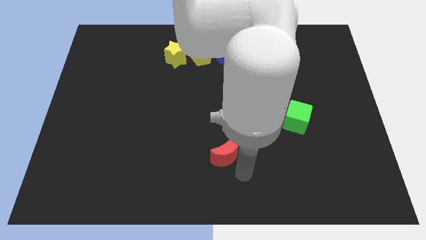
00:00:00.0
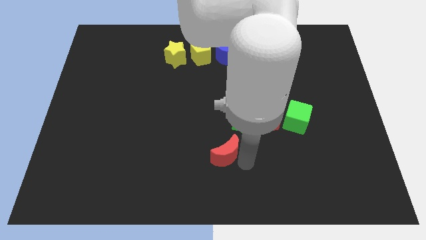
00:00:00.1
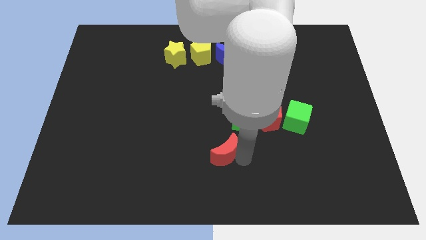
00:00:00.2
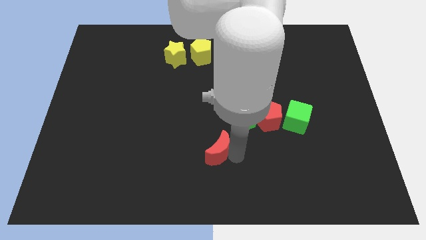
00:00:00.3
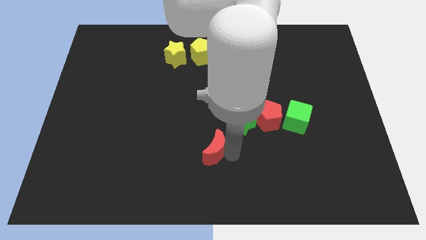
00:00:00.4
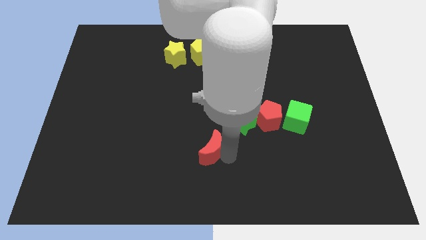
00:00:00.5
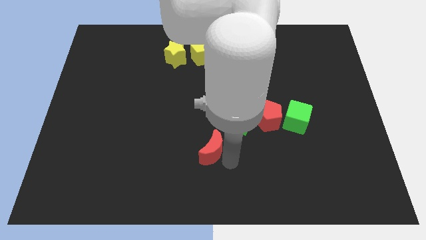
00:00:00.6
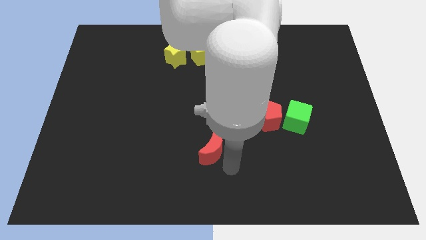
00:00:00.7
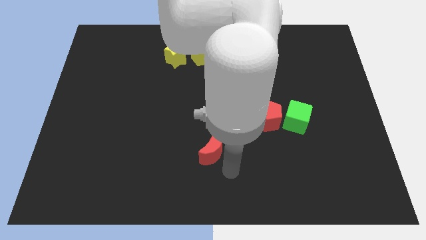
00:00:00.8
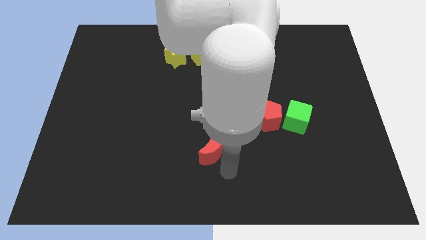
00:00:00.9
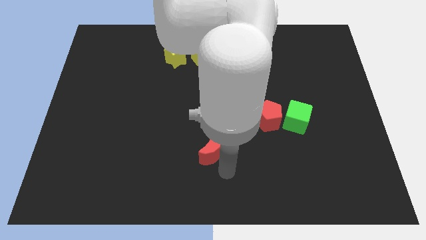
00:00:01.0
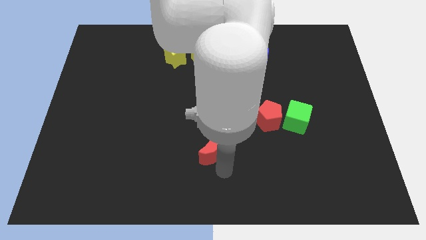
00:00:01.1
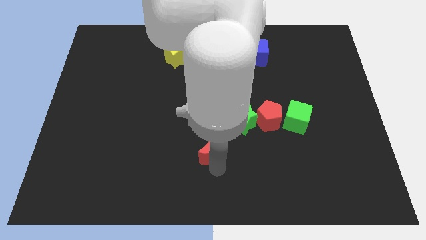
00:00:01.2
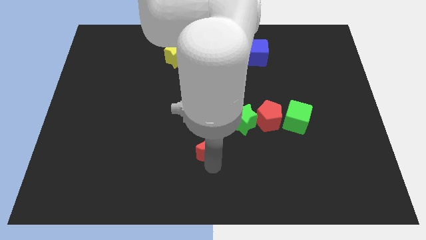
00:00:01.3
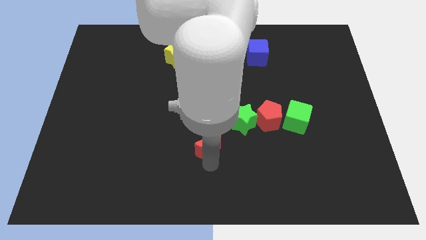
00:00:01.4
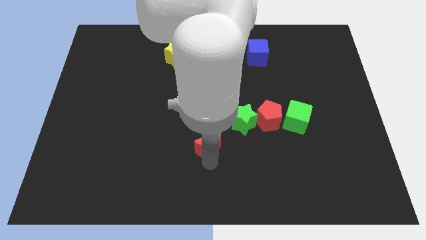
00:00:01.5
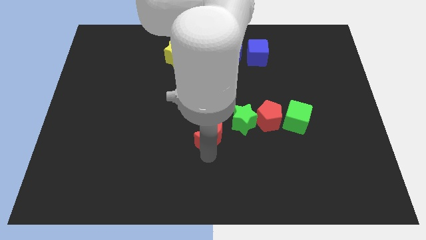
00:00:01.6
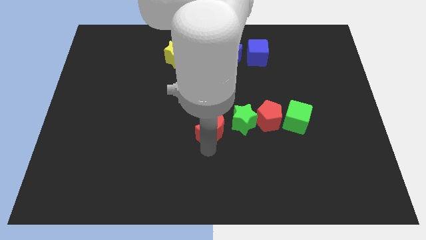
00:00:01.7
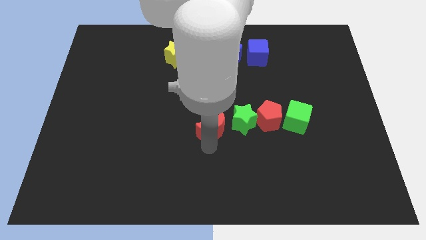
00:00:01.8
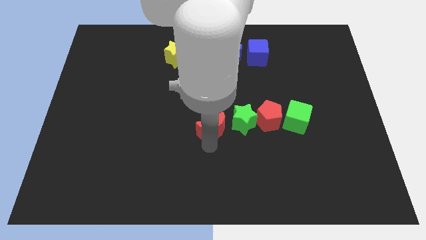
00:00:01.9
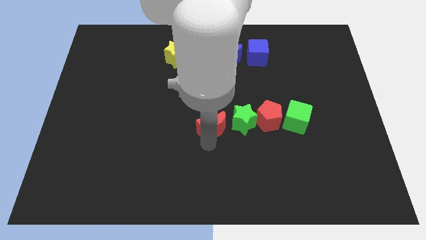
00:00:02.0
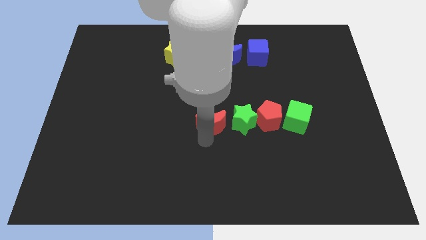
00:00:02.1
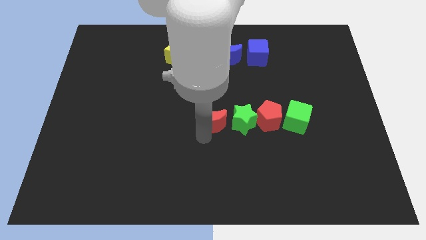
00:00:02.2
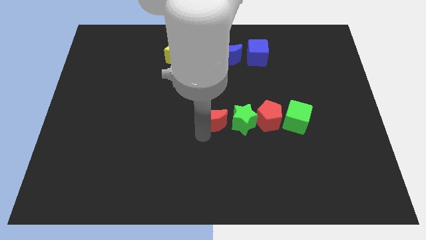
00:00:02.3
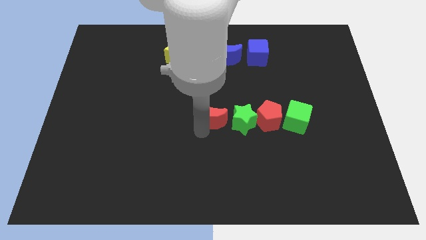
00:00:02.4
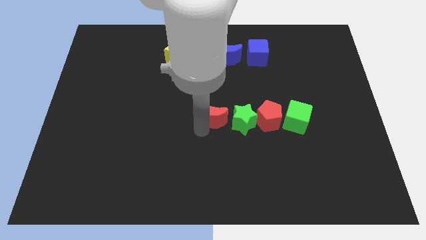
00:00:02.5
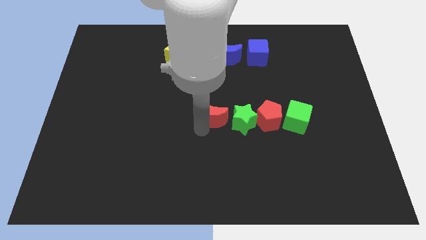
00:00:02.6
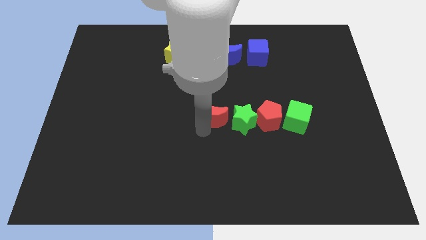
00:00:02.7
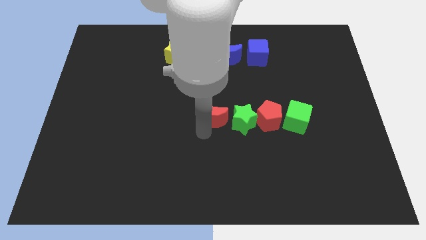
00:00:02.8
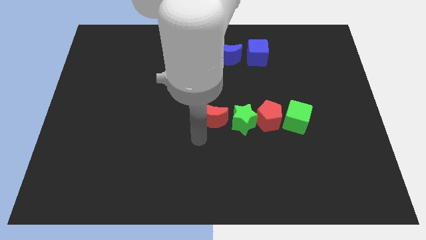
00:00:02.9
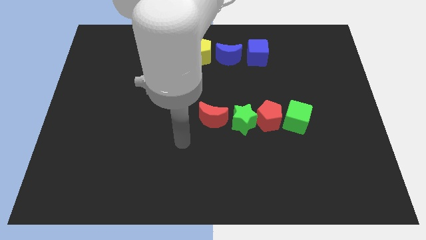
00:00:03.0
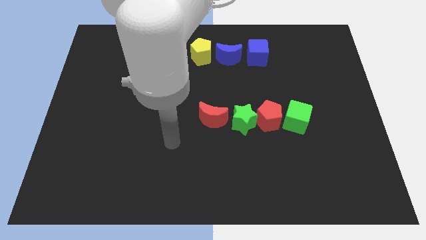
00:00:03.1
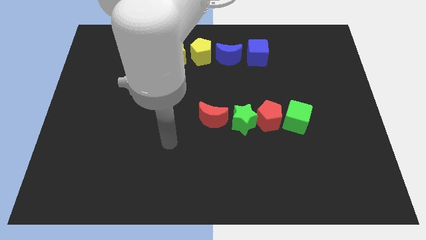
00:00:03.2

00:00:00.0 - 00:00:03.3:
place the red moon close to green star

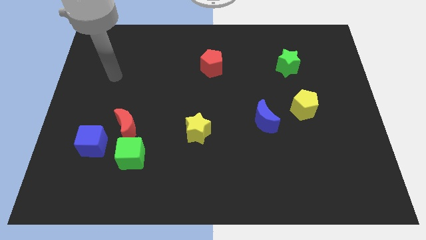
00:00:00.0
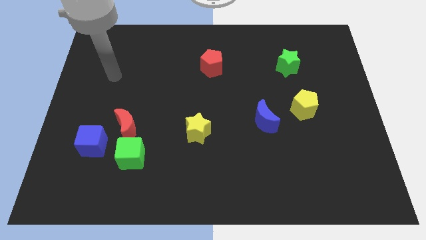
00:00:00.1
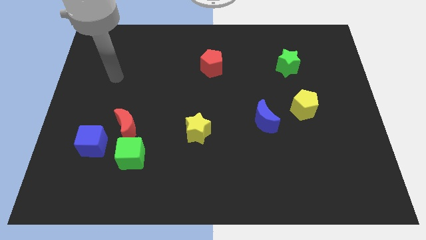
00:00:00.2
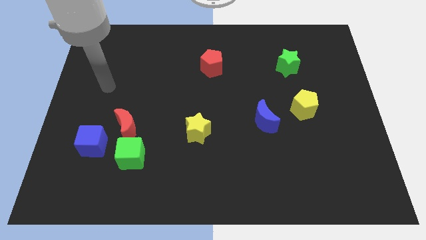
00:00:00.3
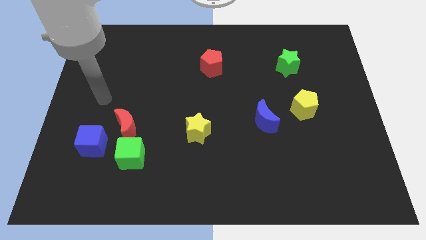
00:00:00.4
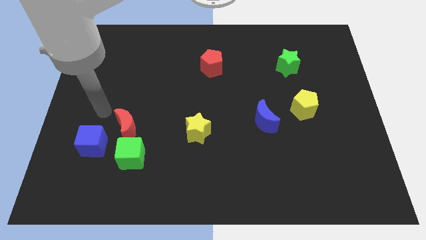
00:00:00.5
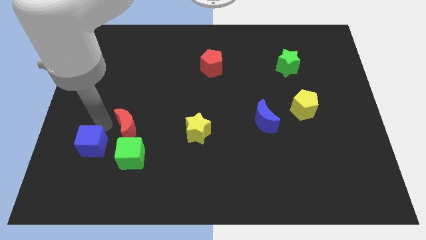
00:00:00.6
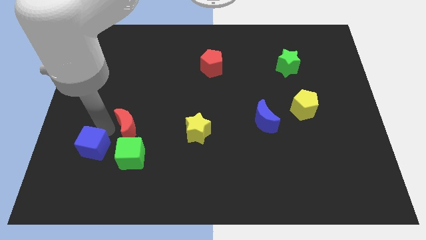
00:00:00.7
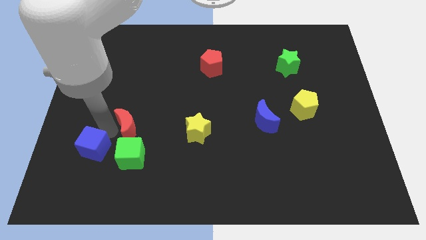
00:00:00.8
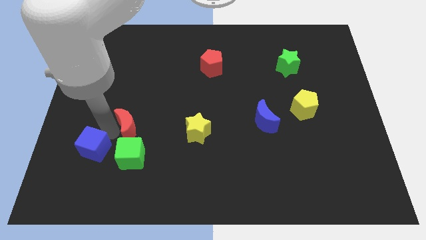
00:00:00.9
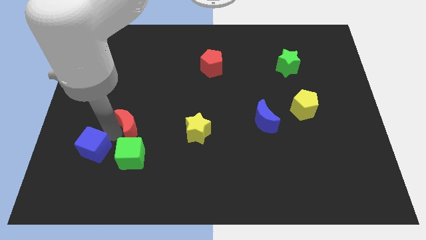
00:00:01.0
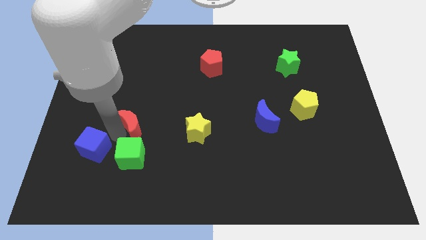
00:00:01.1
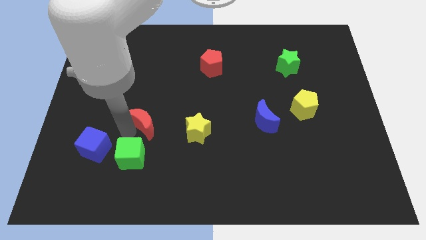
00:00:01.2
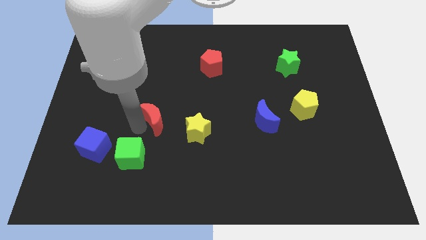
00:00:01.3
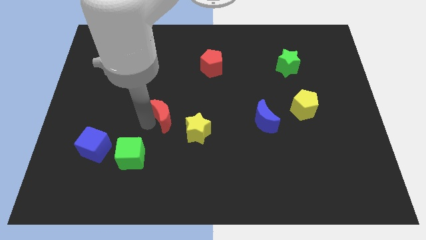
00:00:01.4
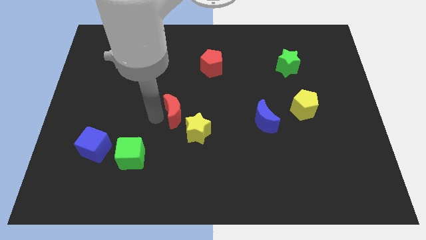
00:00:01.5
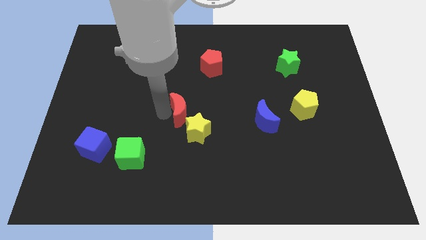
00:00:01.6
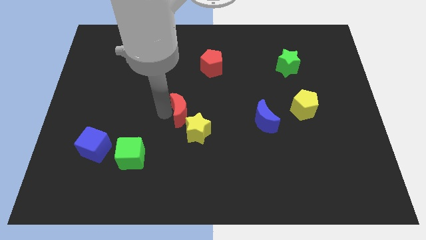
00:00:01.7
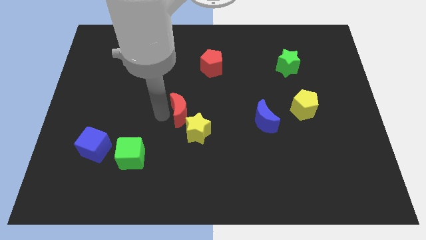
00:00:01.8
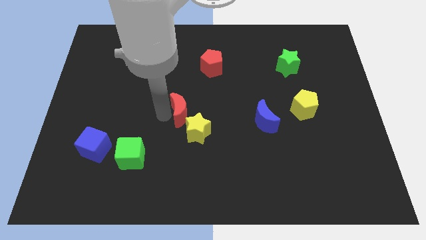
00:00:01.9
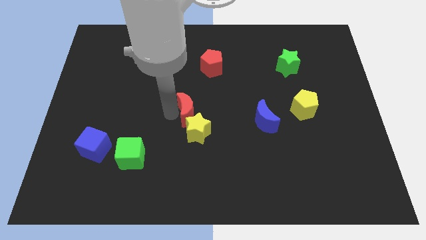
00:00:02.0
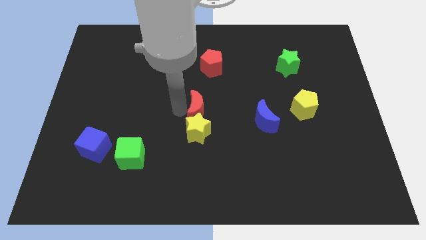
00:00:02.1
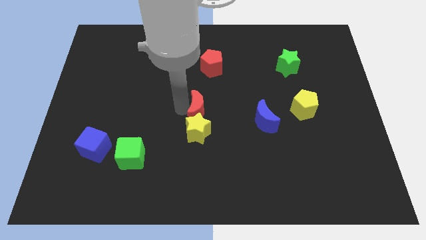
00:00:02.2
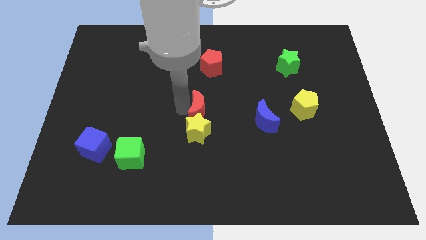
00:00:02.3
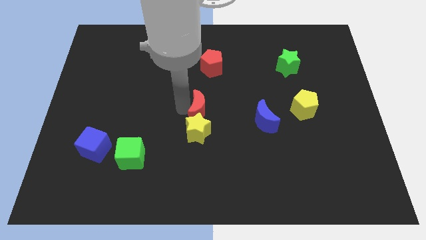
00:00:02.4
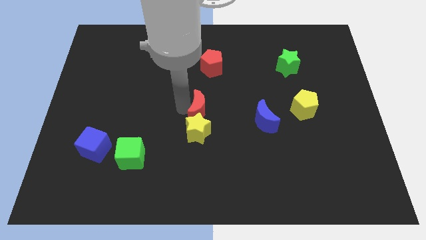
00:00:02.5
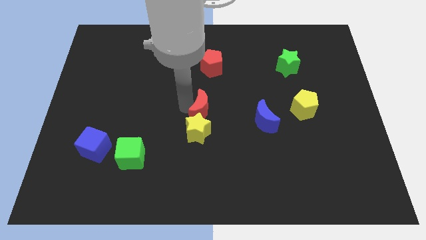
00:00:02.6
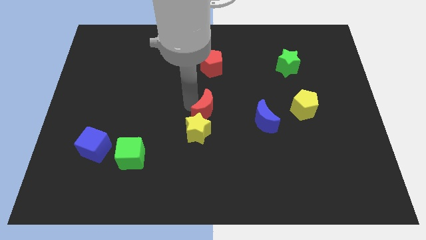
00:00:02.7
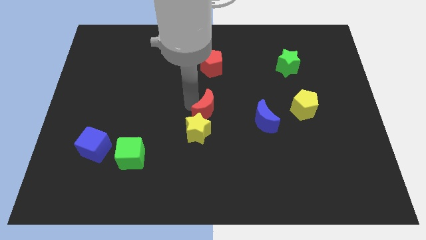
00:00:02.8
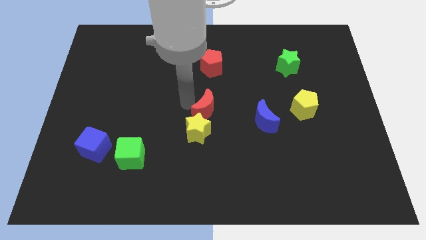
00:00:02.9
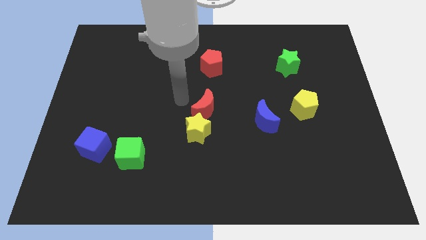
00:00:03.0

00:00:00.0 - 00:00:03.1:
place the red moon above the yellow star

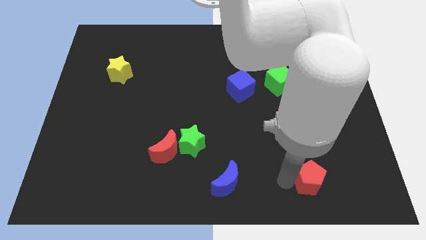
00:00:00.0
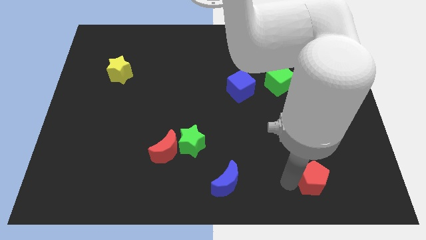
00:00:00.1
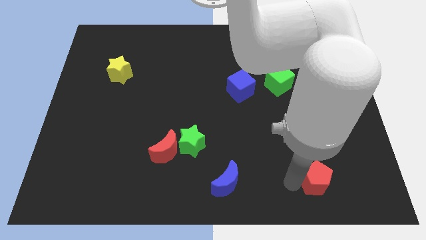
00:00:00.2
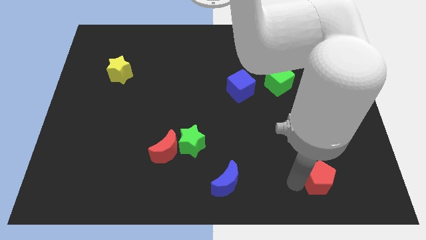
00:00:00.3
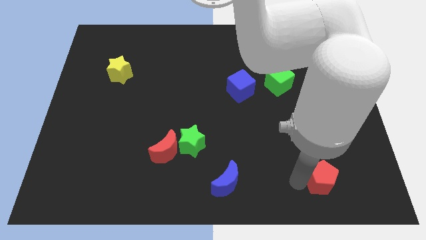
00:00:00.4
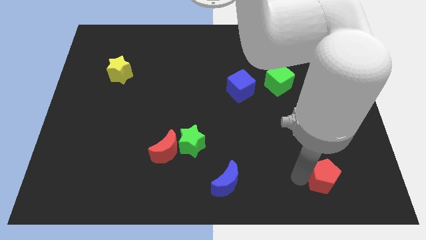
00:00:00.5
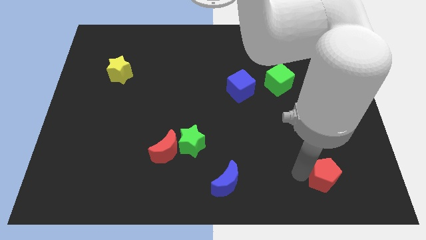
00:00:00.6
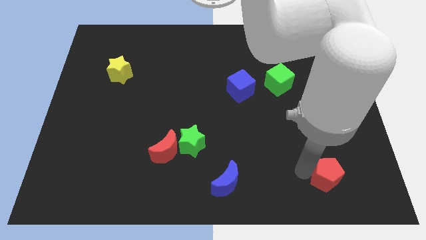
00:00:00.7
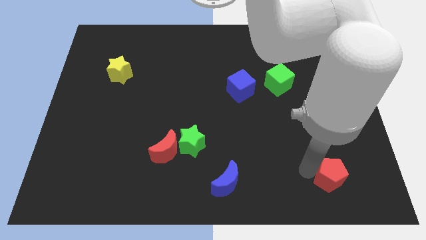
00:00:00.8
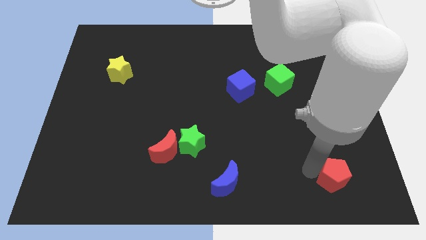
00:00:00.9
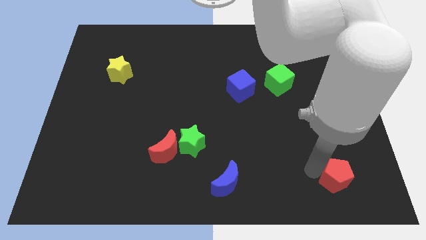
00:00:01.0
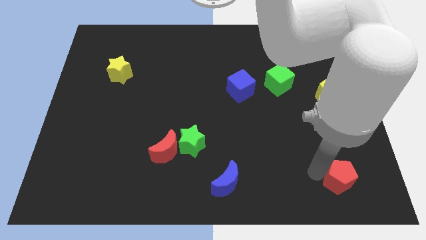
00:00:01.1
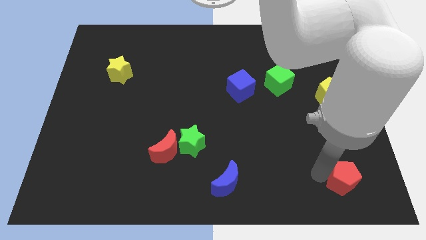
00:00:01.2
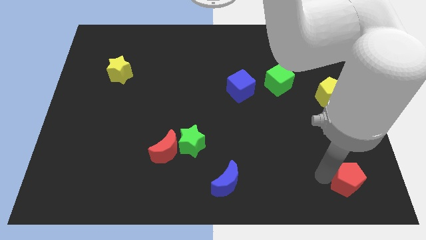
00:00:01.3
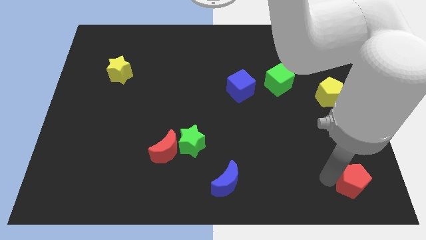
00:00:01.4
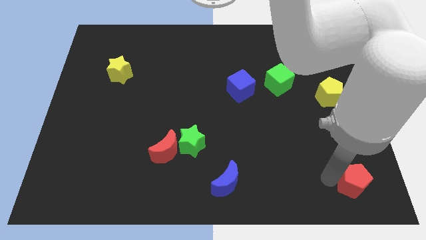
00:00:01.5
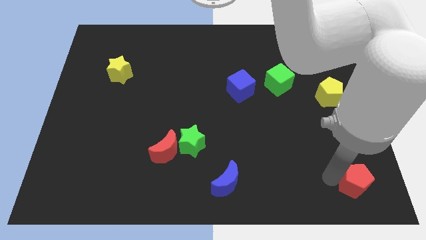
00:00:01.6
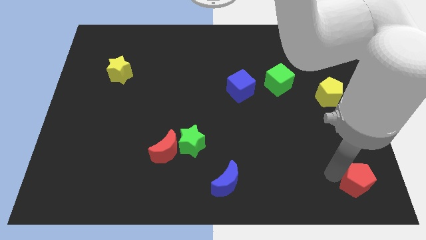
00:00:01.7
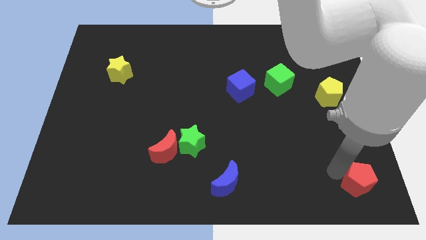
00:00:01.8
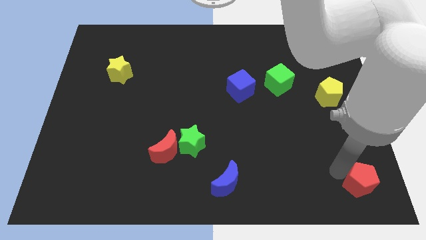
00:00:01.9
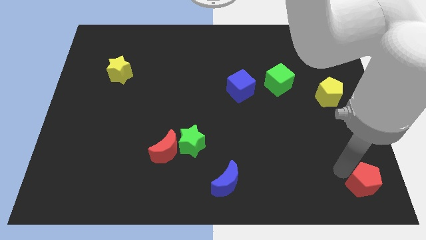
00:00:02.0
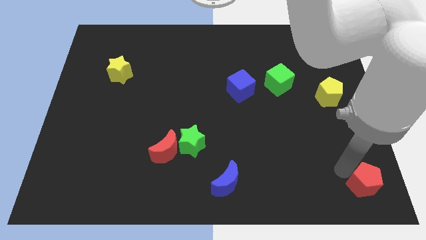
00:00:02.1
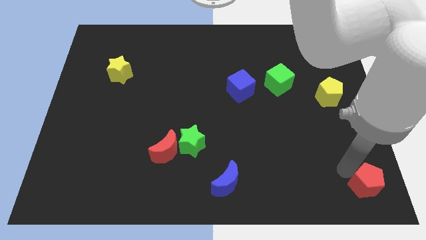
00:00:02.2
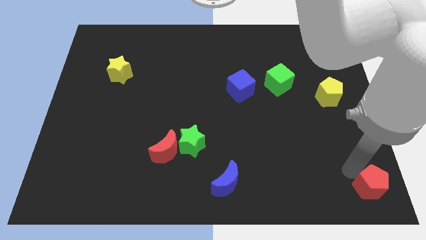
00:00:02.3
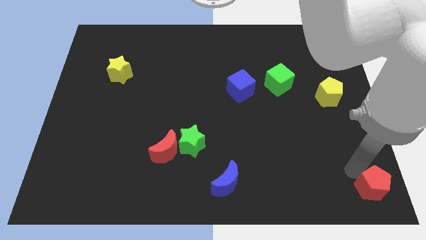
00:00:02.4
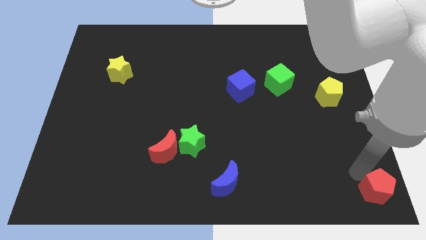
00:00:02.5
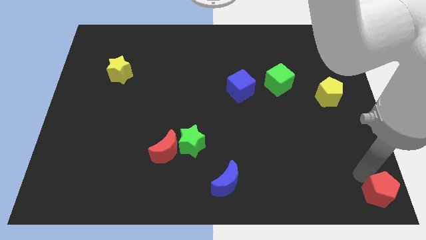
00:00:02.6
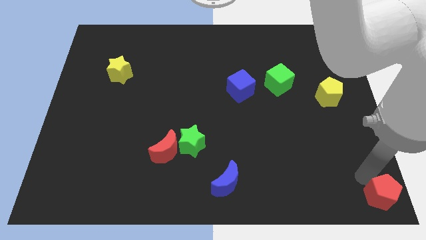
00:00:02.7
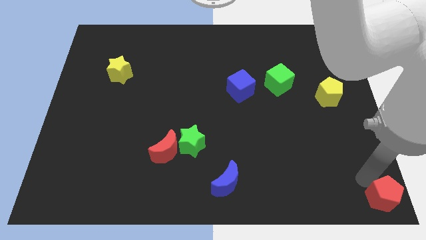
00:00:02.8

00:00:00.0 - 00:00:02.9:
move the red pentagon to the bottom right corner
